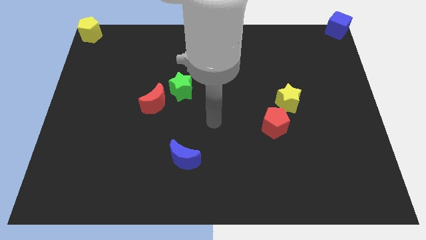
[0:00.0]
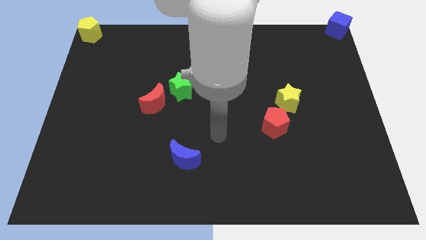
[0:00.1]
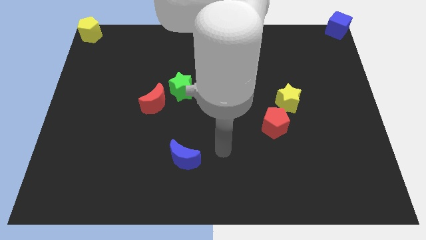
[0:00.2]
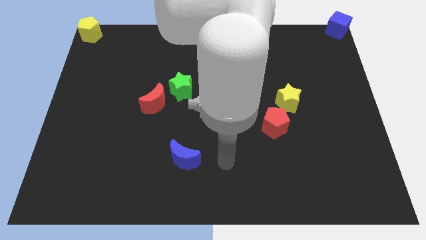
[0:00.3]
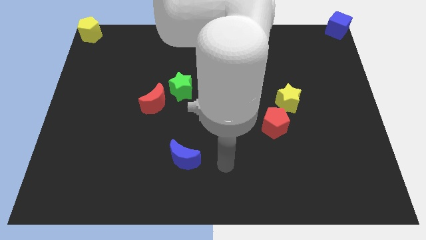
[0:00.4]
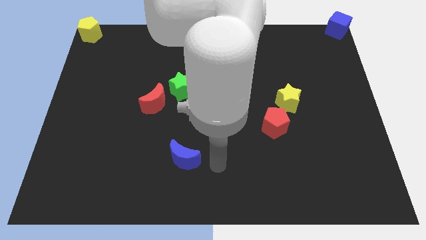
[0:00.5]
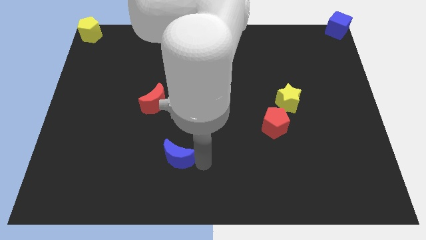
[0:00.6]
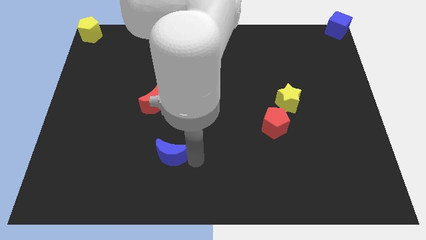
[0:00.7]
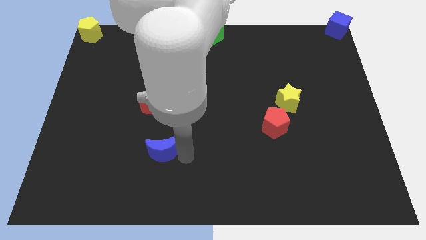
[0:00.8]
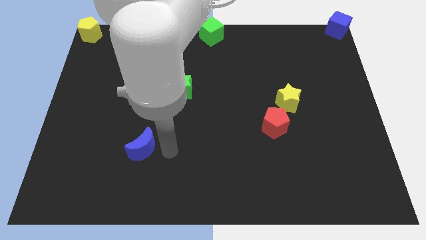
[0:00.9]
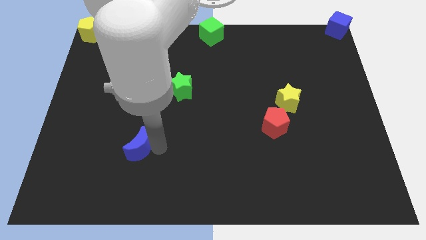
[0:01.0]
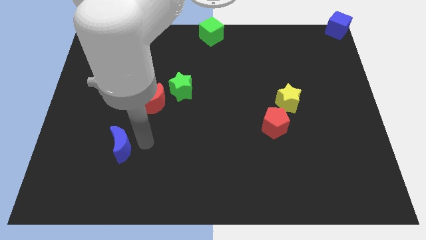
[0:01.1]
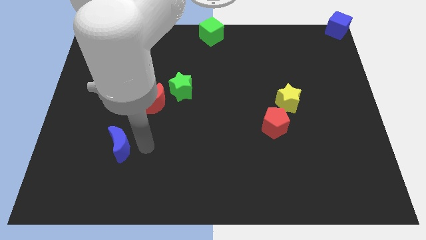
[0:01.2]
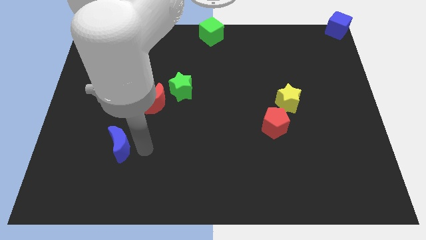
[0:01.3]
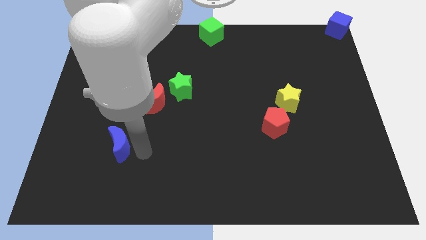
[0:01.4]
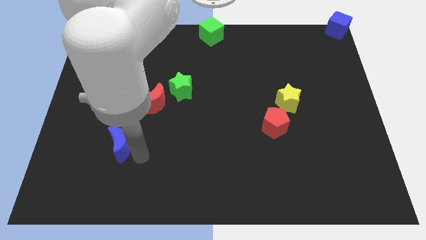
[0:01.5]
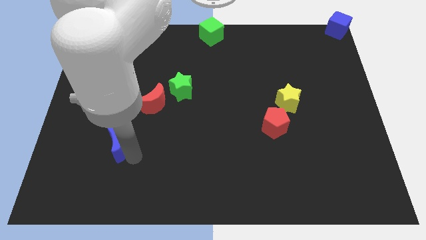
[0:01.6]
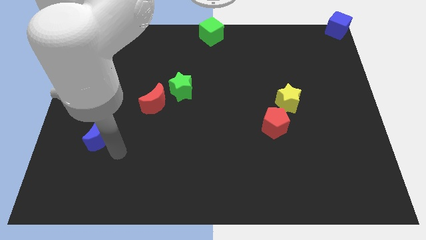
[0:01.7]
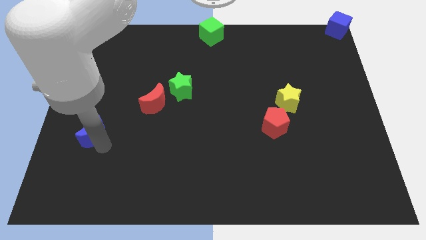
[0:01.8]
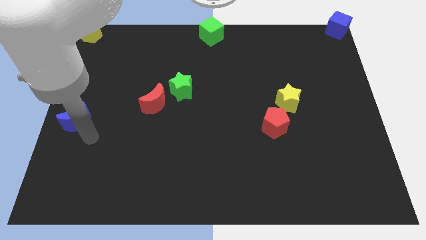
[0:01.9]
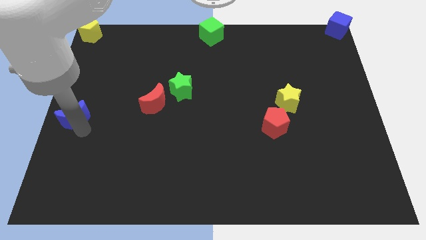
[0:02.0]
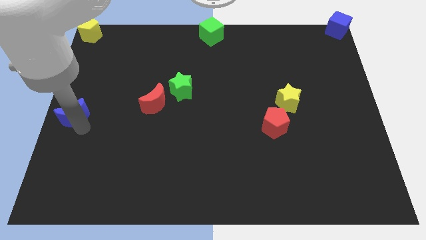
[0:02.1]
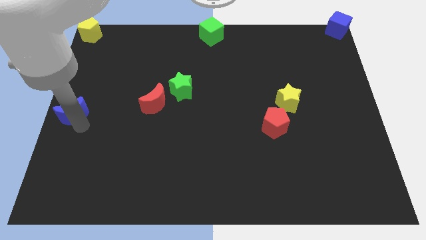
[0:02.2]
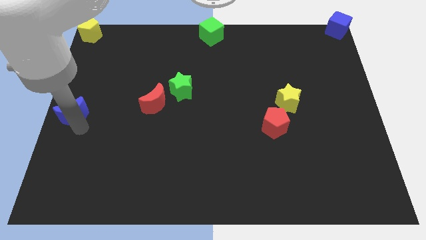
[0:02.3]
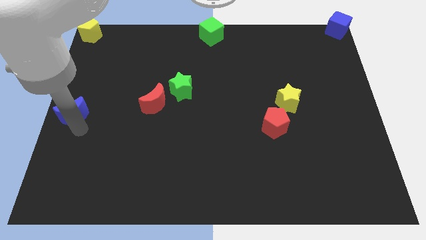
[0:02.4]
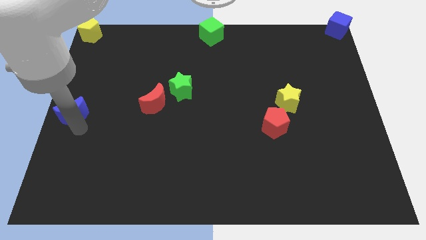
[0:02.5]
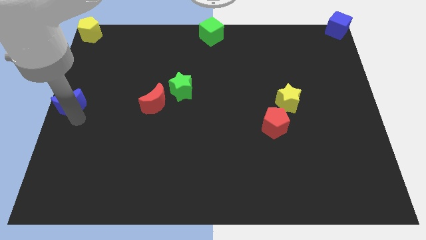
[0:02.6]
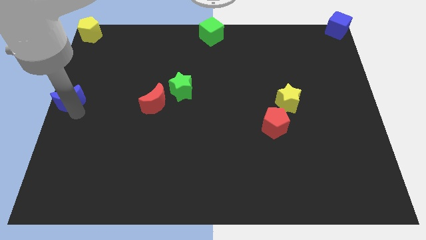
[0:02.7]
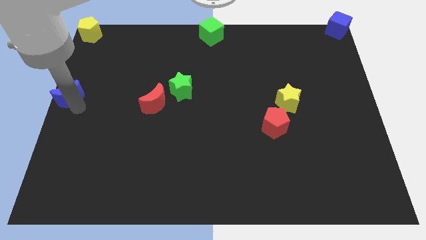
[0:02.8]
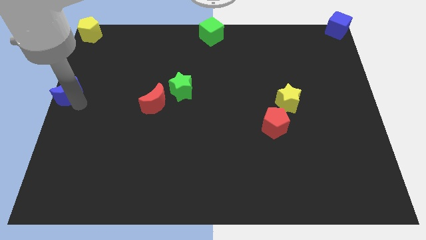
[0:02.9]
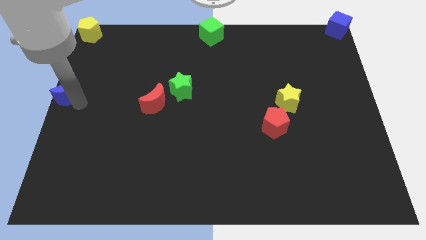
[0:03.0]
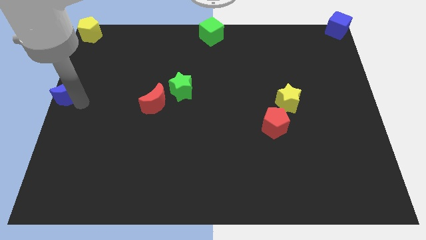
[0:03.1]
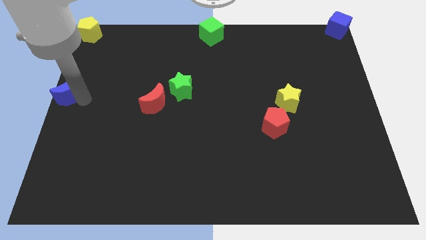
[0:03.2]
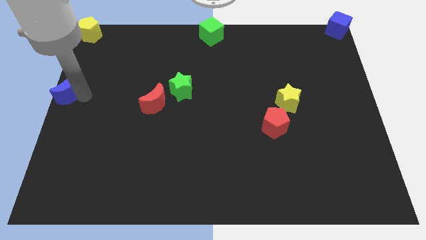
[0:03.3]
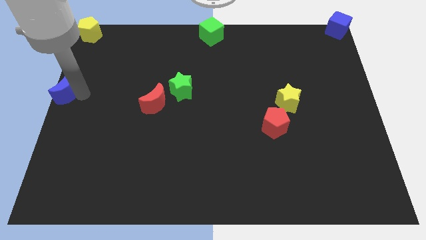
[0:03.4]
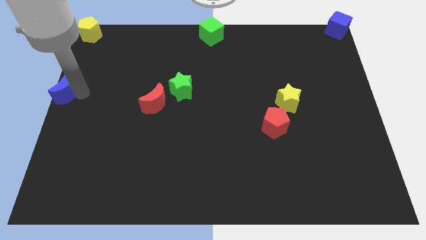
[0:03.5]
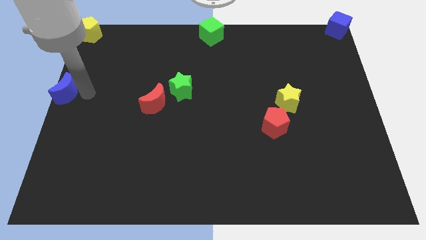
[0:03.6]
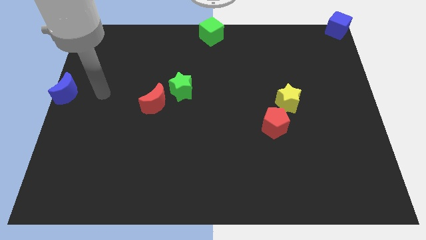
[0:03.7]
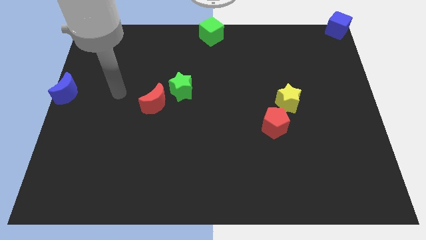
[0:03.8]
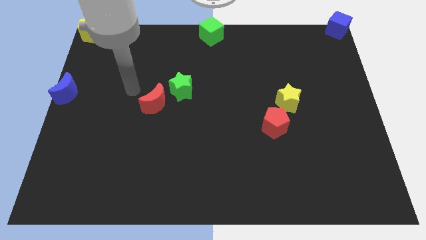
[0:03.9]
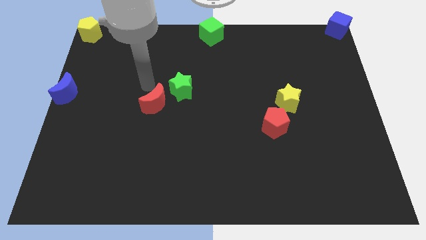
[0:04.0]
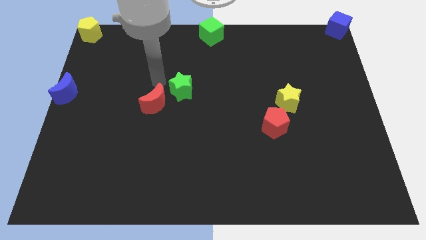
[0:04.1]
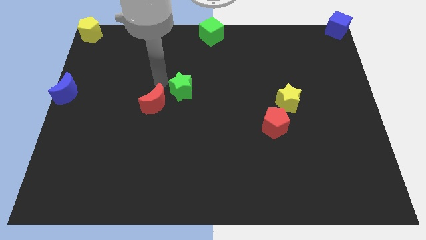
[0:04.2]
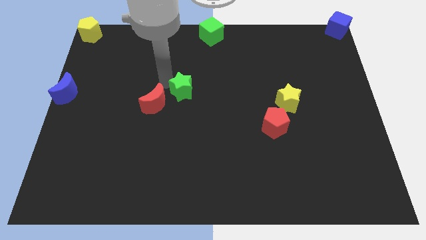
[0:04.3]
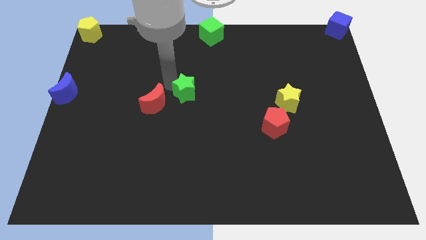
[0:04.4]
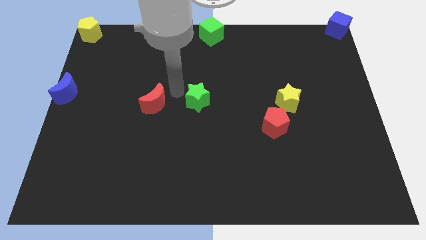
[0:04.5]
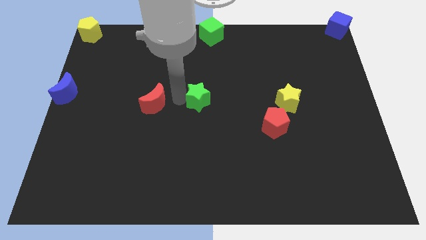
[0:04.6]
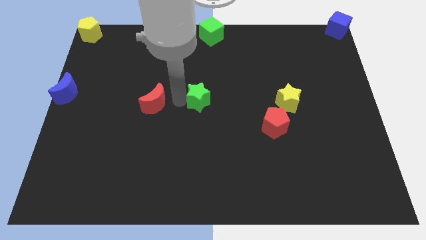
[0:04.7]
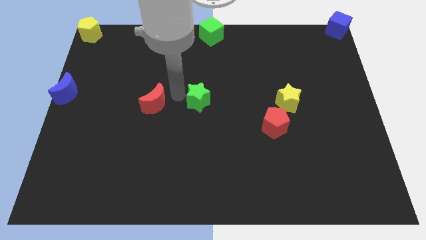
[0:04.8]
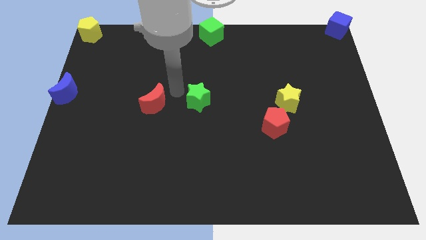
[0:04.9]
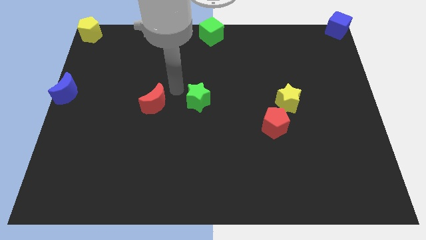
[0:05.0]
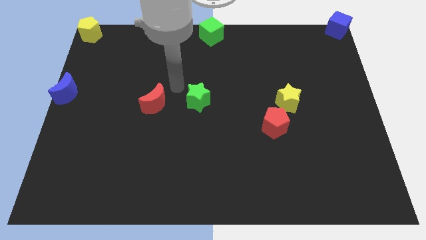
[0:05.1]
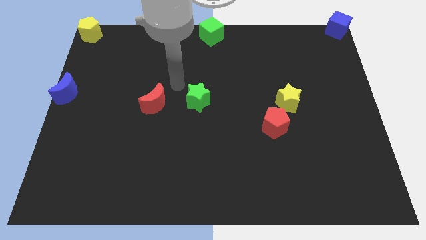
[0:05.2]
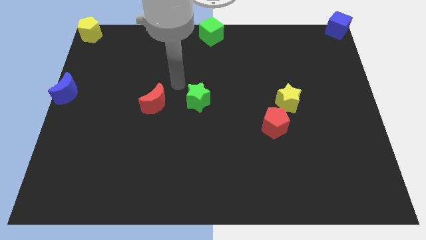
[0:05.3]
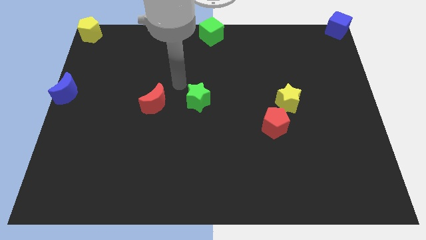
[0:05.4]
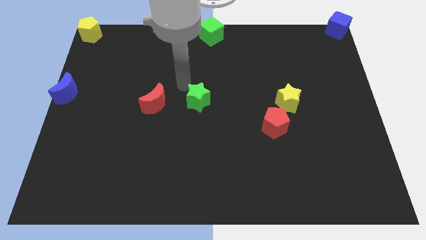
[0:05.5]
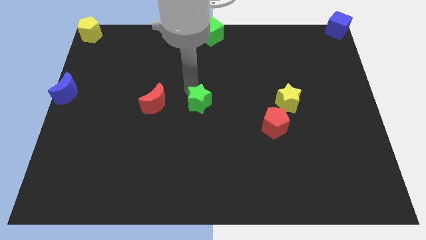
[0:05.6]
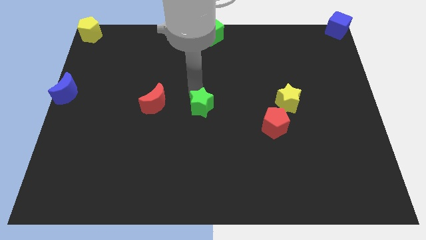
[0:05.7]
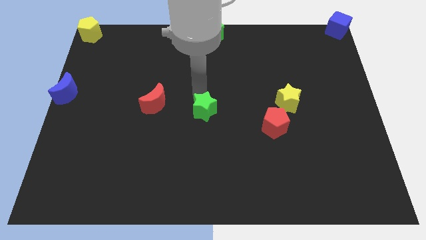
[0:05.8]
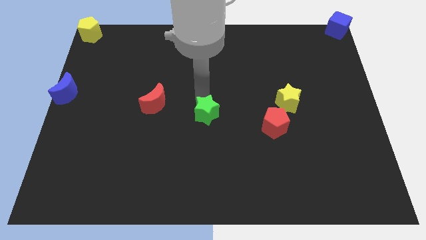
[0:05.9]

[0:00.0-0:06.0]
move the blue moon to left center of the board

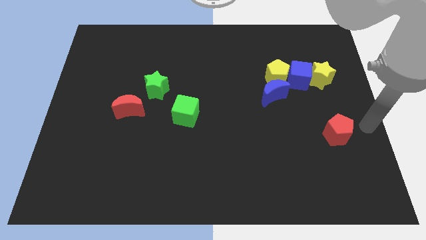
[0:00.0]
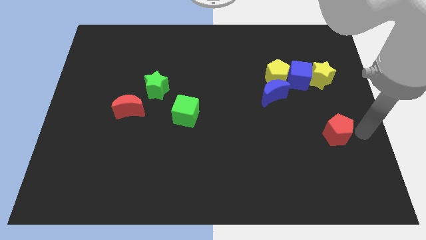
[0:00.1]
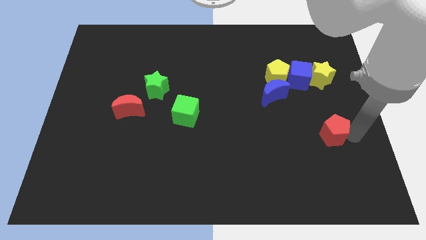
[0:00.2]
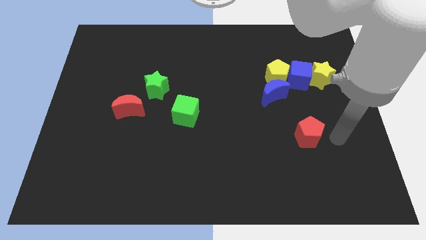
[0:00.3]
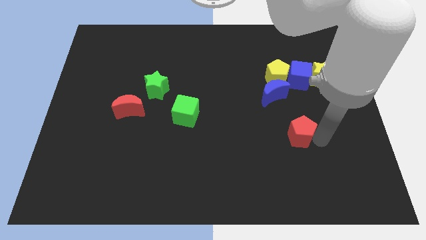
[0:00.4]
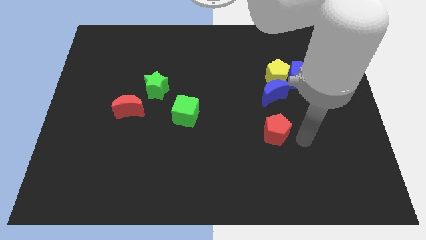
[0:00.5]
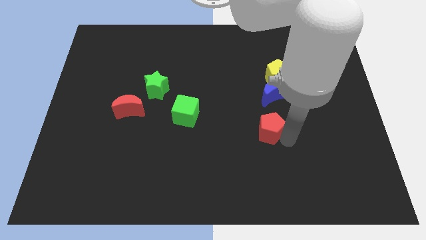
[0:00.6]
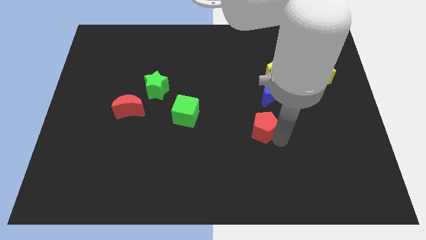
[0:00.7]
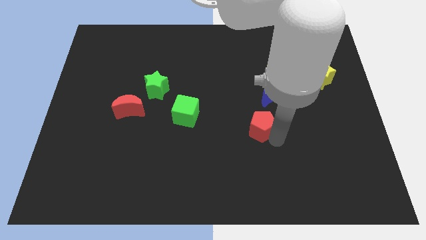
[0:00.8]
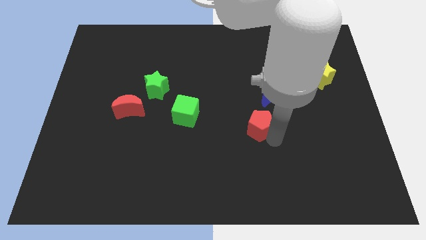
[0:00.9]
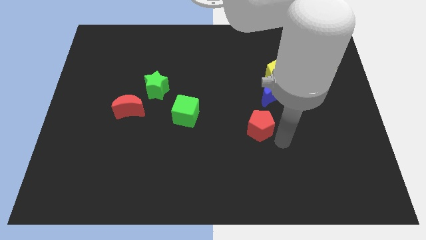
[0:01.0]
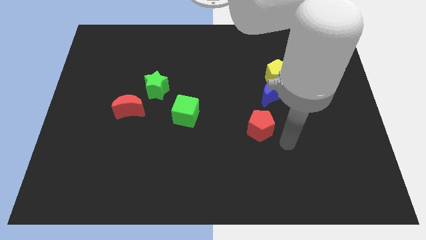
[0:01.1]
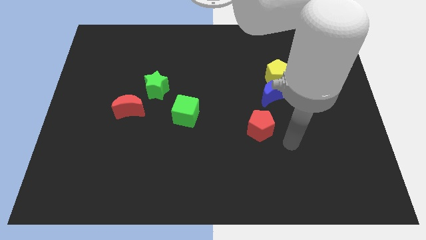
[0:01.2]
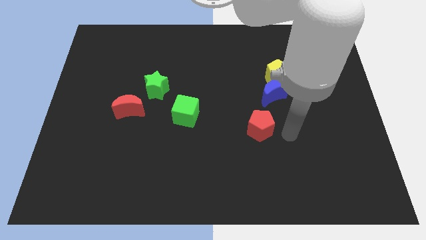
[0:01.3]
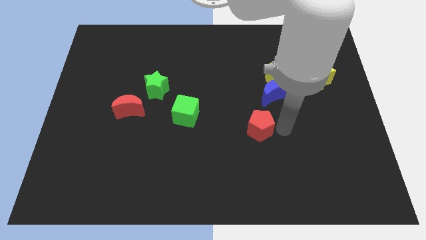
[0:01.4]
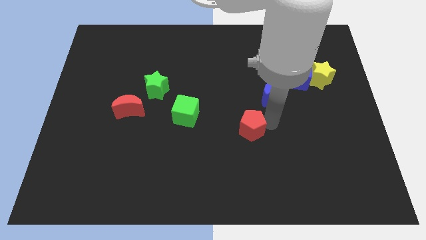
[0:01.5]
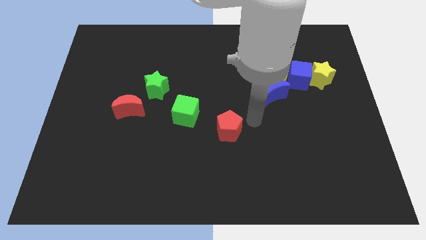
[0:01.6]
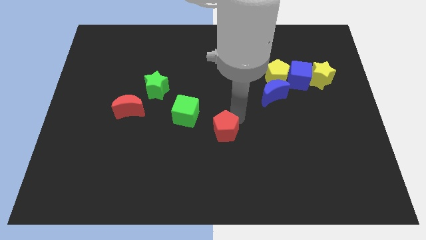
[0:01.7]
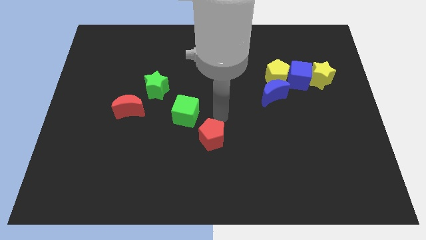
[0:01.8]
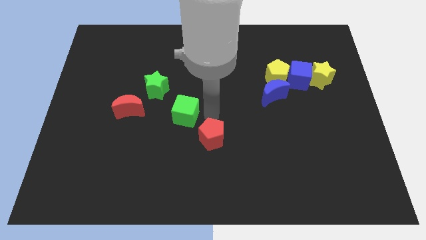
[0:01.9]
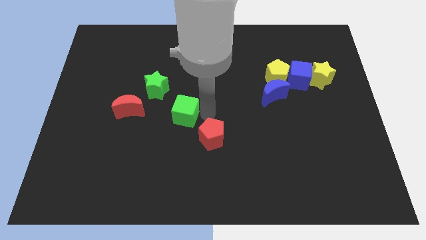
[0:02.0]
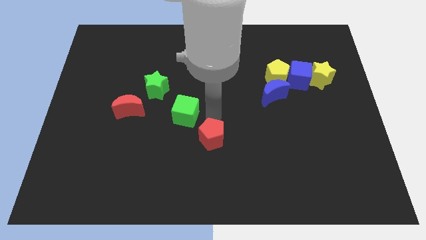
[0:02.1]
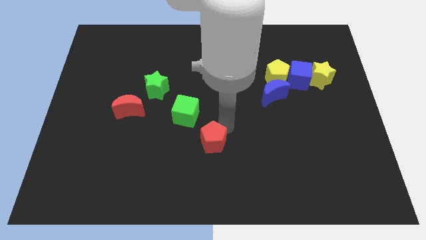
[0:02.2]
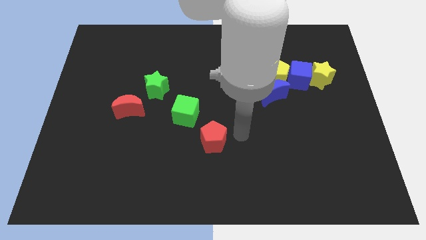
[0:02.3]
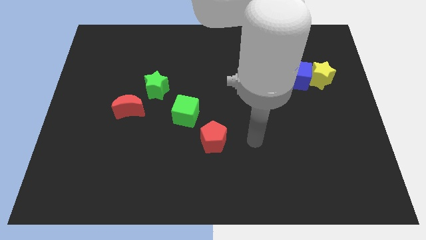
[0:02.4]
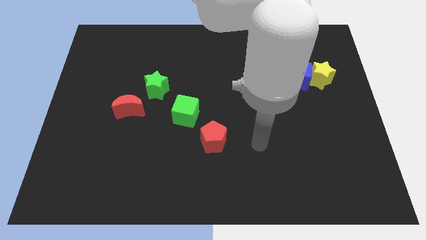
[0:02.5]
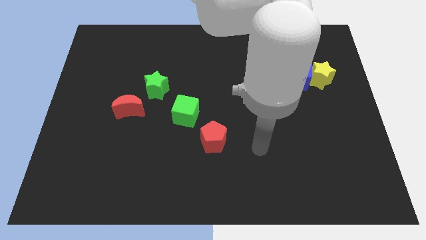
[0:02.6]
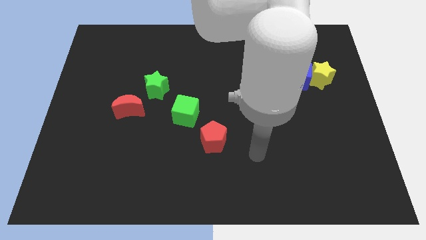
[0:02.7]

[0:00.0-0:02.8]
place the red pentagon diagonally to green cube
